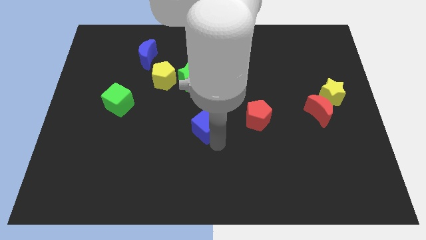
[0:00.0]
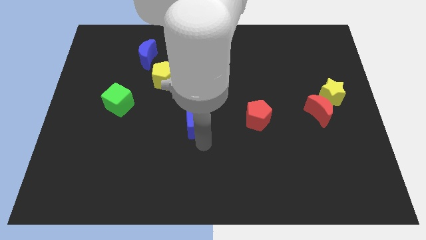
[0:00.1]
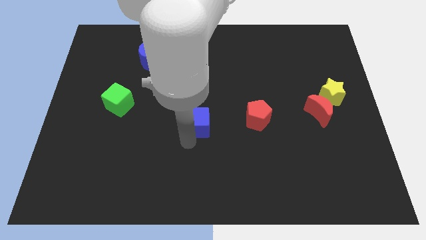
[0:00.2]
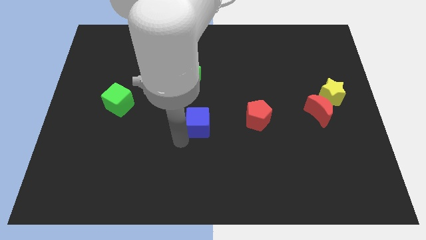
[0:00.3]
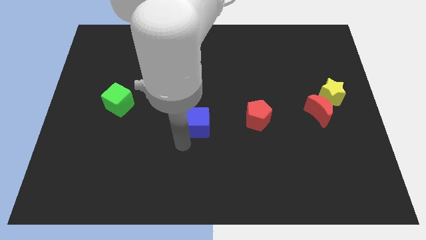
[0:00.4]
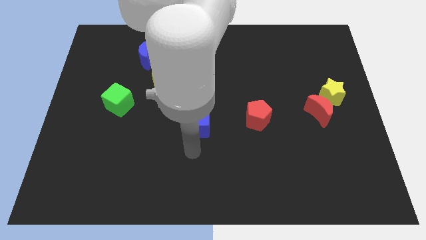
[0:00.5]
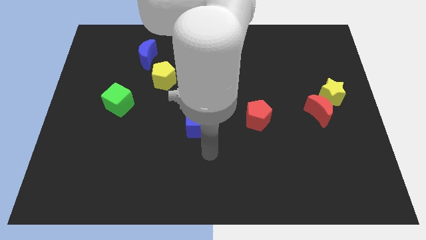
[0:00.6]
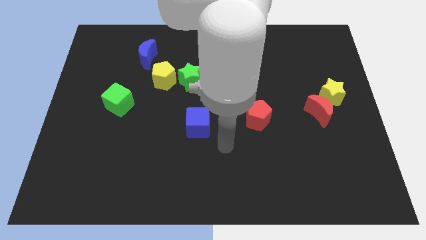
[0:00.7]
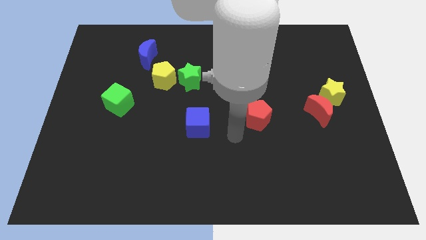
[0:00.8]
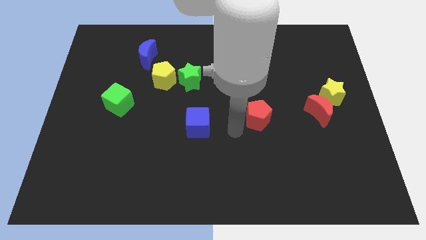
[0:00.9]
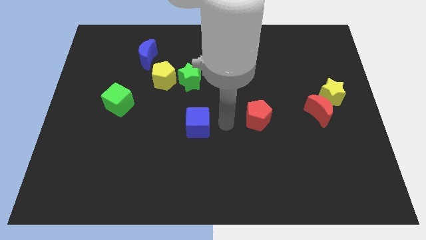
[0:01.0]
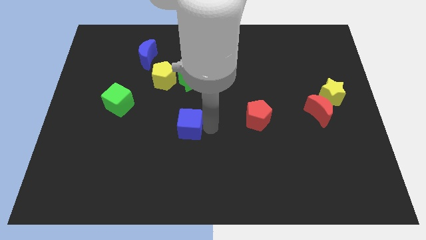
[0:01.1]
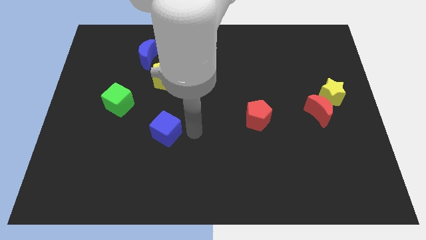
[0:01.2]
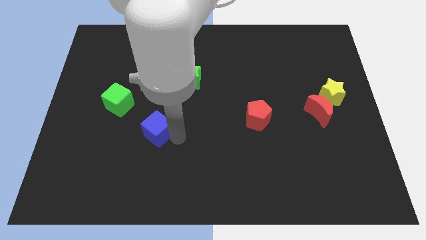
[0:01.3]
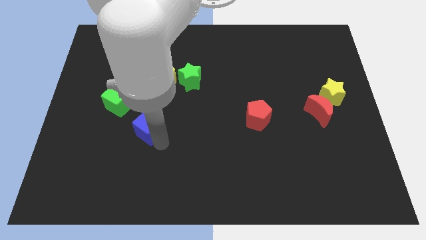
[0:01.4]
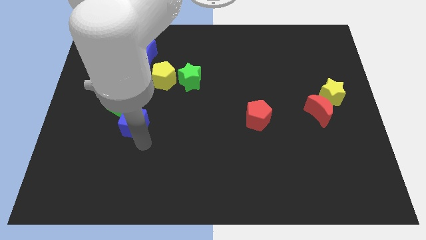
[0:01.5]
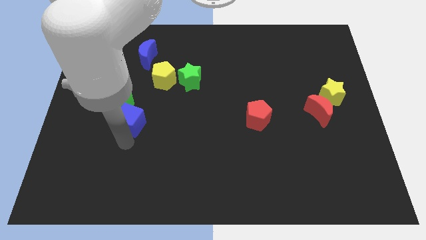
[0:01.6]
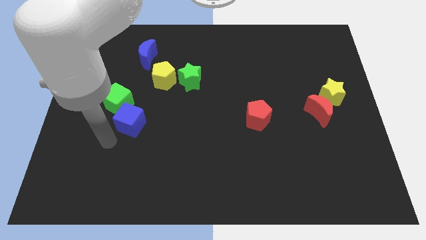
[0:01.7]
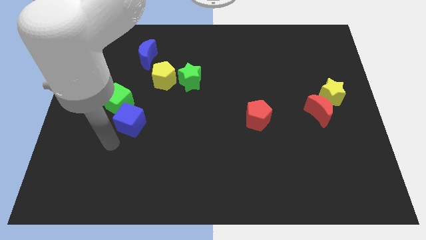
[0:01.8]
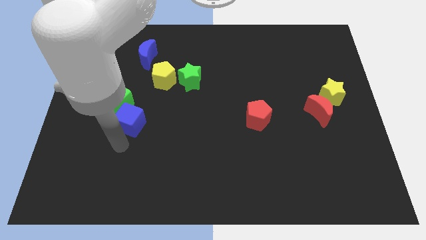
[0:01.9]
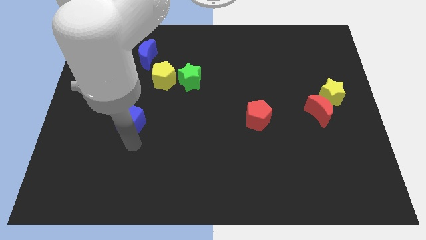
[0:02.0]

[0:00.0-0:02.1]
push blue cube below green cube

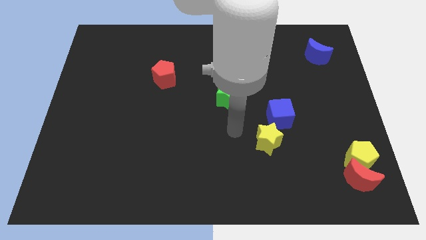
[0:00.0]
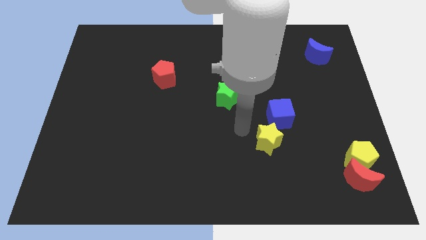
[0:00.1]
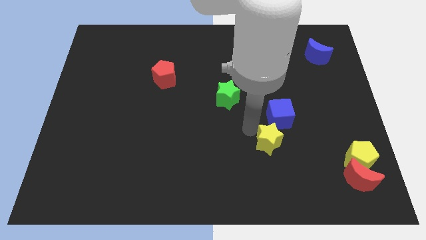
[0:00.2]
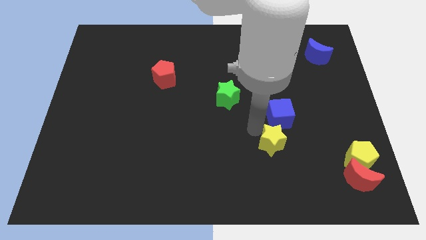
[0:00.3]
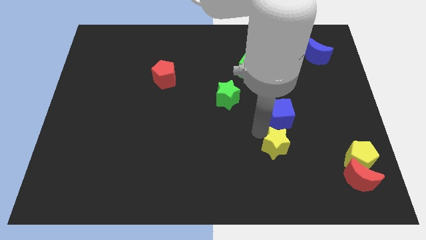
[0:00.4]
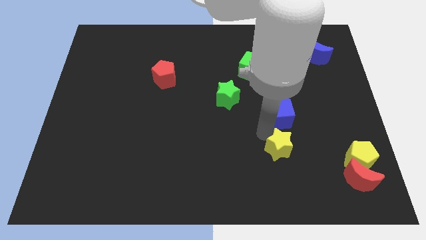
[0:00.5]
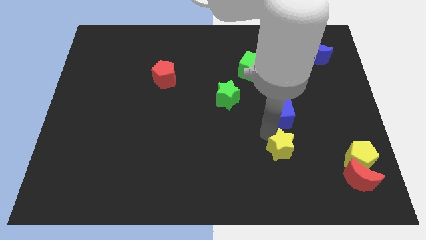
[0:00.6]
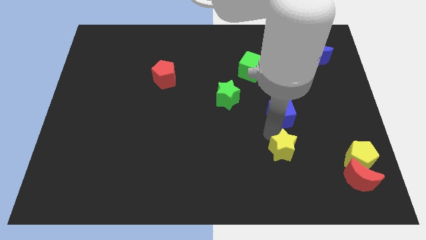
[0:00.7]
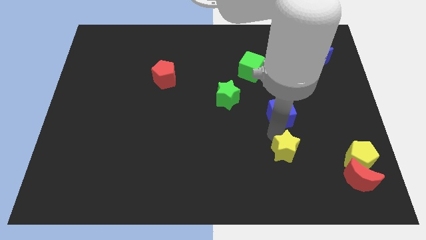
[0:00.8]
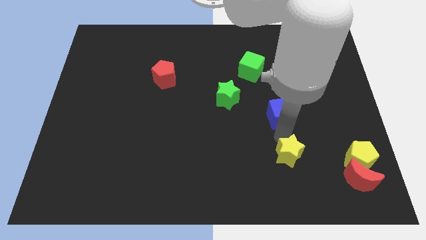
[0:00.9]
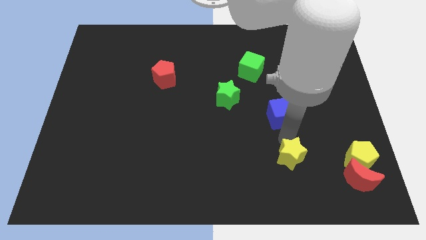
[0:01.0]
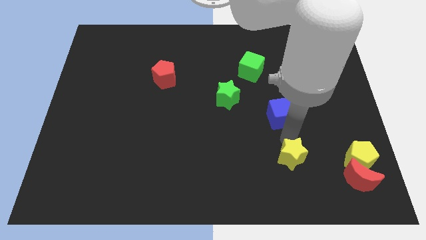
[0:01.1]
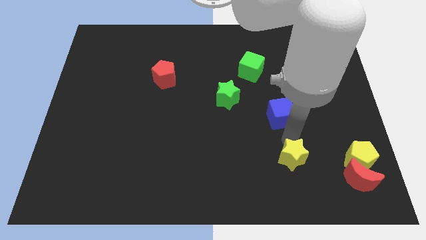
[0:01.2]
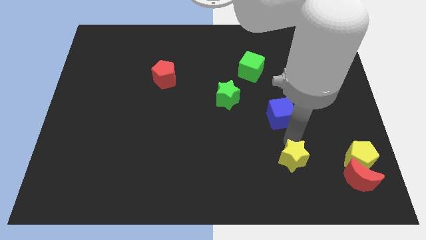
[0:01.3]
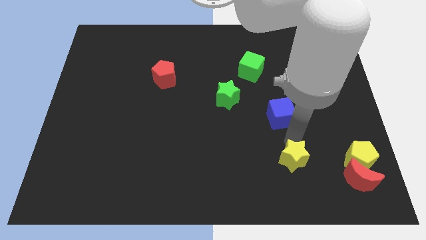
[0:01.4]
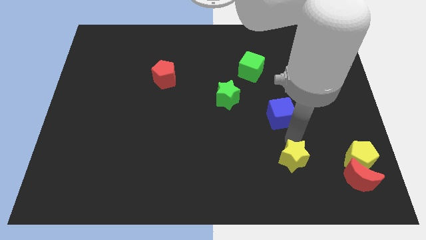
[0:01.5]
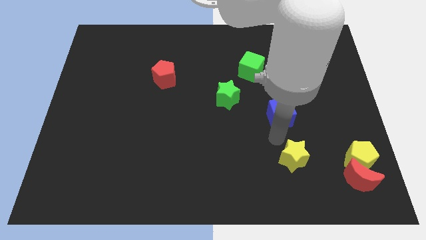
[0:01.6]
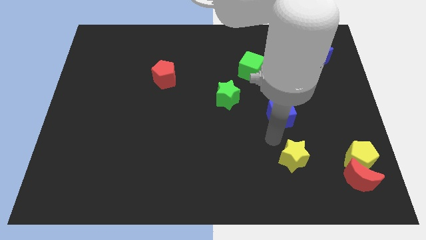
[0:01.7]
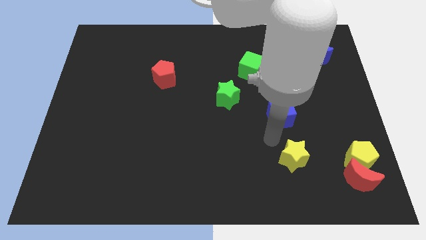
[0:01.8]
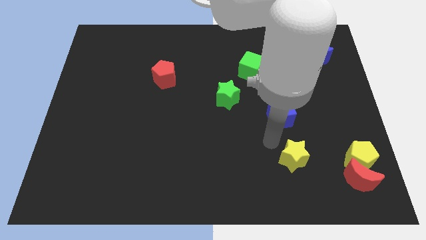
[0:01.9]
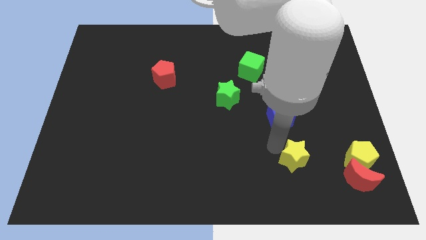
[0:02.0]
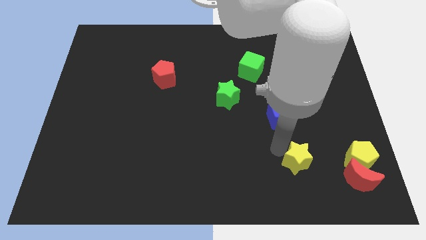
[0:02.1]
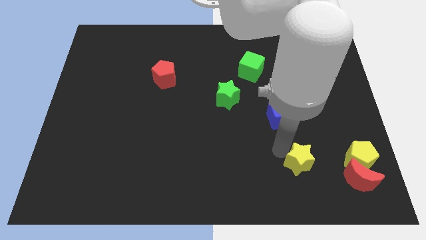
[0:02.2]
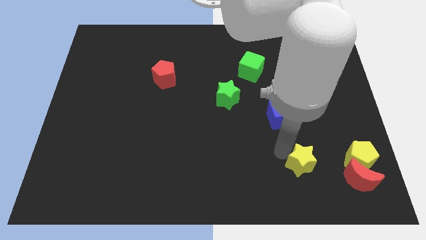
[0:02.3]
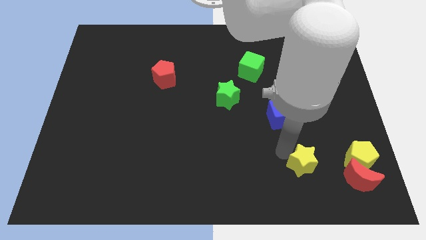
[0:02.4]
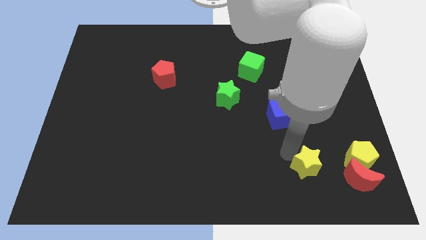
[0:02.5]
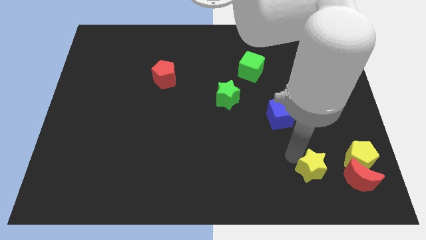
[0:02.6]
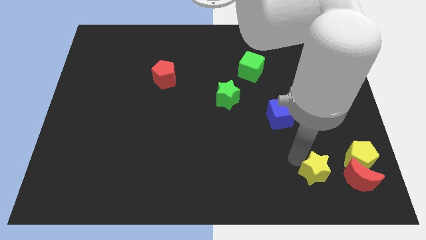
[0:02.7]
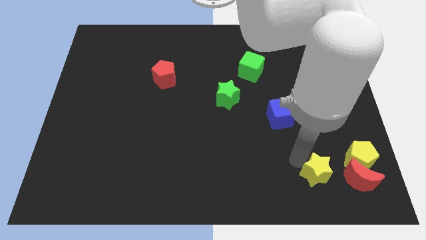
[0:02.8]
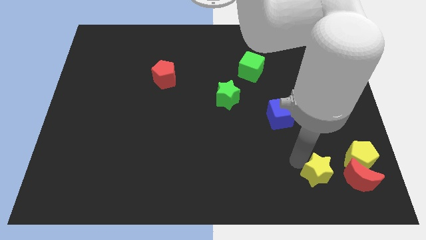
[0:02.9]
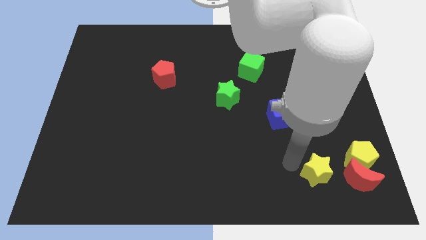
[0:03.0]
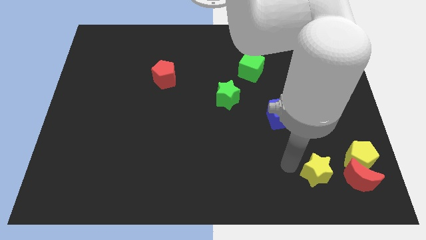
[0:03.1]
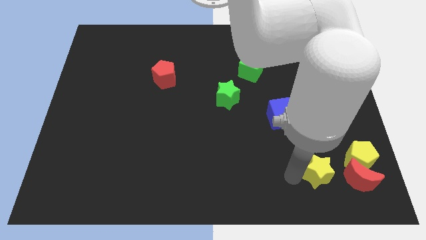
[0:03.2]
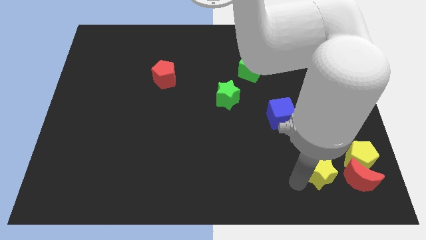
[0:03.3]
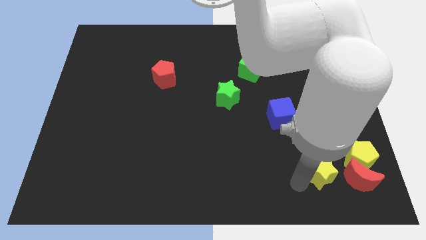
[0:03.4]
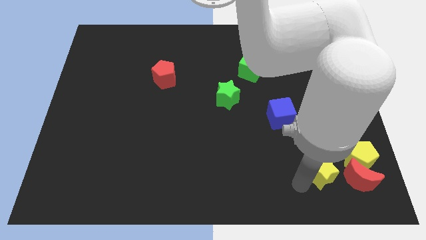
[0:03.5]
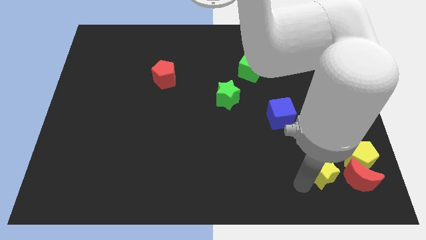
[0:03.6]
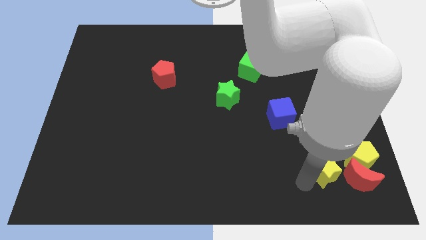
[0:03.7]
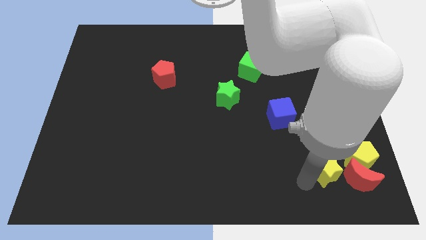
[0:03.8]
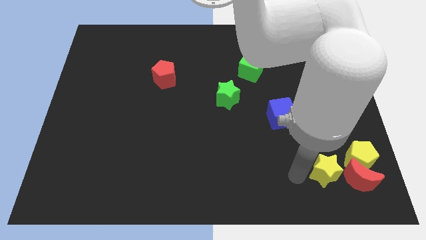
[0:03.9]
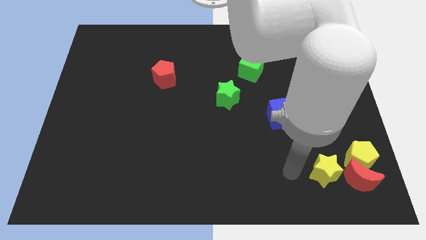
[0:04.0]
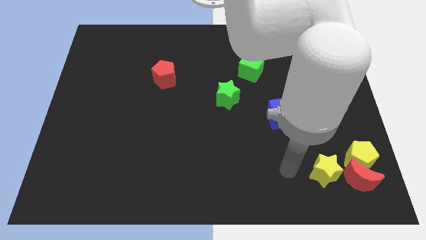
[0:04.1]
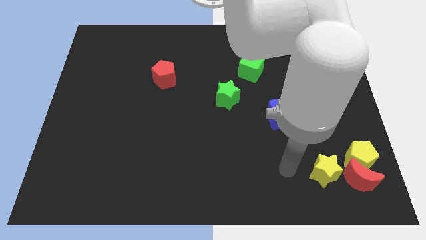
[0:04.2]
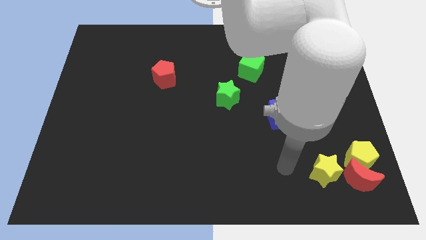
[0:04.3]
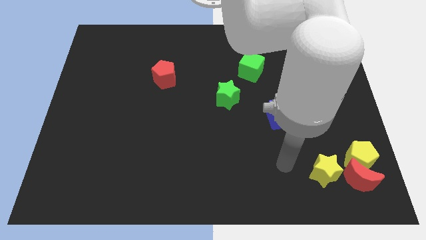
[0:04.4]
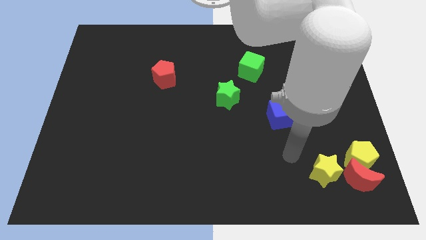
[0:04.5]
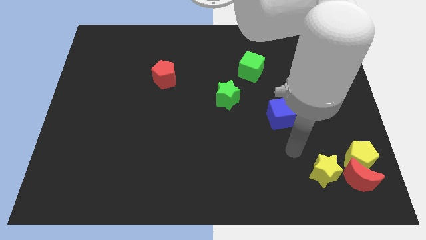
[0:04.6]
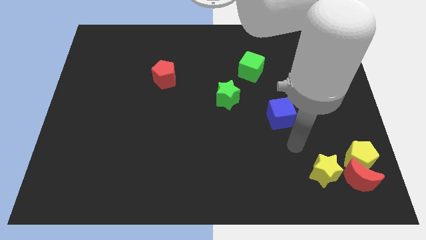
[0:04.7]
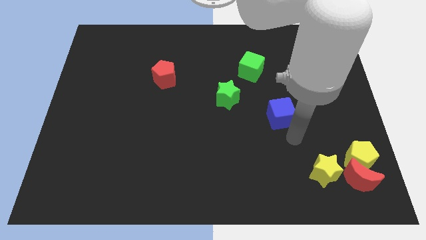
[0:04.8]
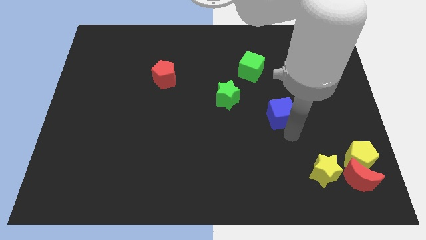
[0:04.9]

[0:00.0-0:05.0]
place the yellow star to the left of red moon

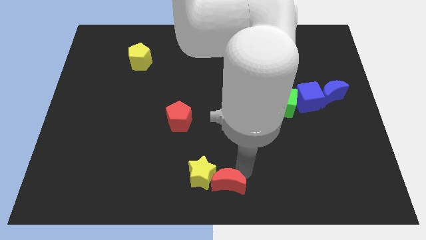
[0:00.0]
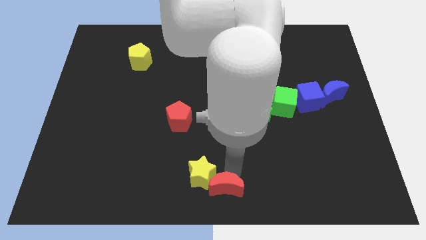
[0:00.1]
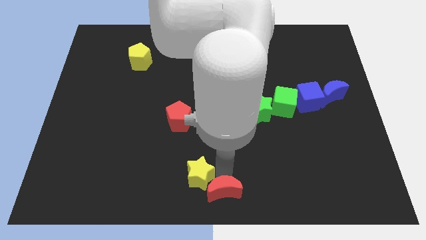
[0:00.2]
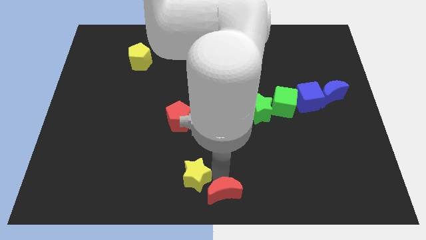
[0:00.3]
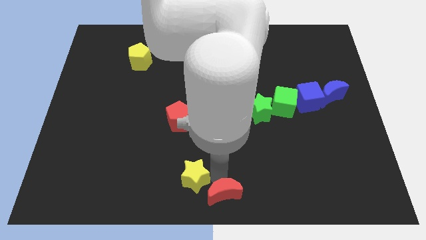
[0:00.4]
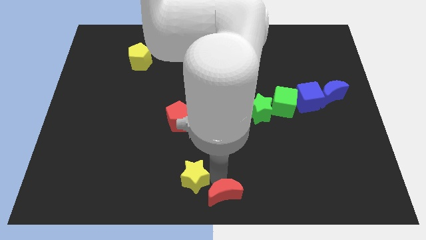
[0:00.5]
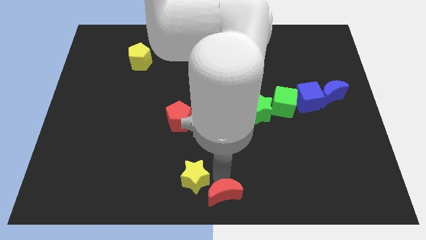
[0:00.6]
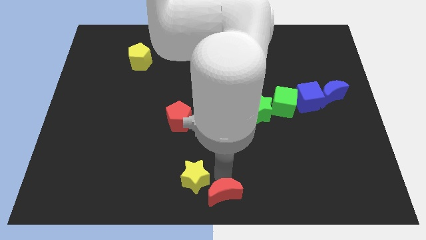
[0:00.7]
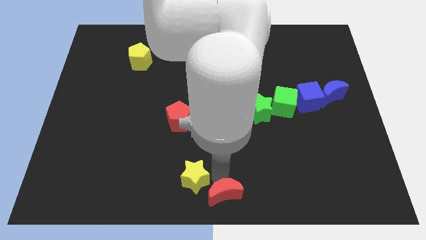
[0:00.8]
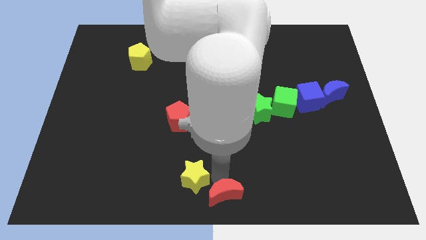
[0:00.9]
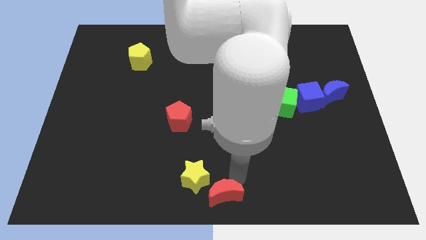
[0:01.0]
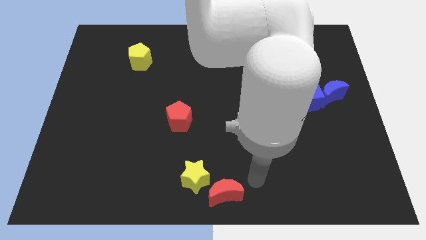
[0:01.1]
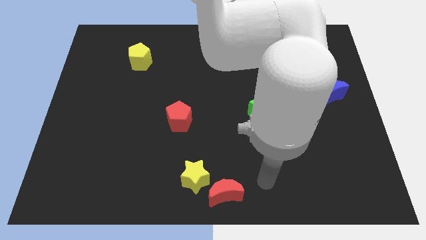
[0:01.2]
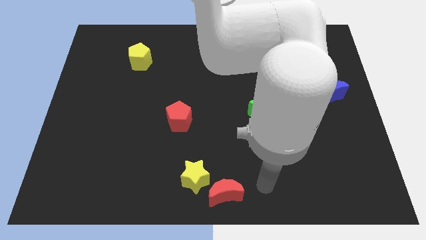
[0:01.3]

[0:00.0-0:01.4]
separate the yellow star and red moon

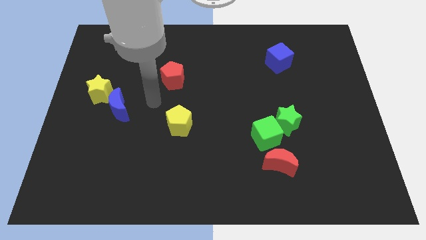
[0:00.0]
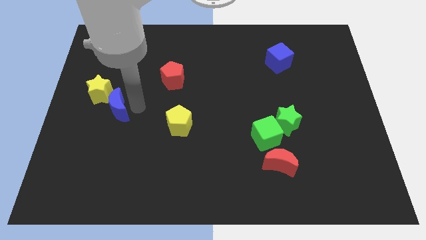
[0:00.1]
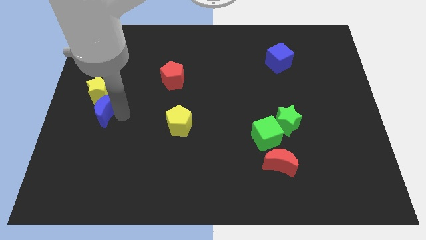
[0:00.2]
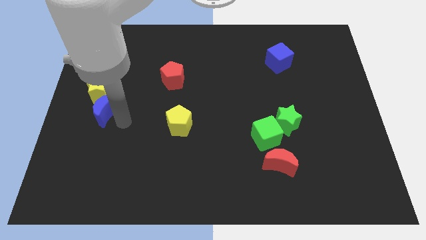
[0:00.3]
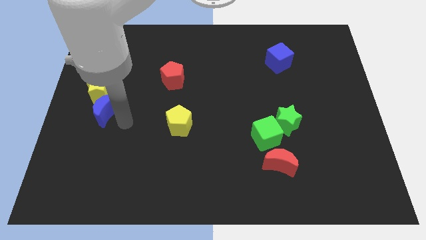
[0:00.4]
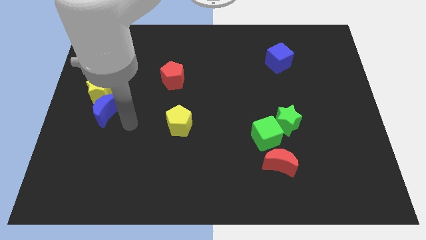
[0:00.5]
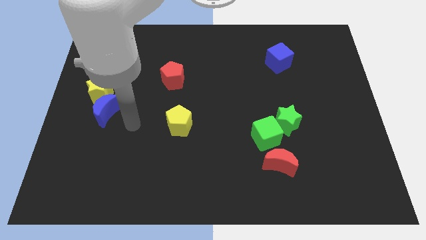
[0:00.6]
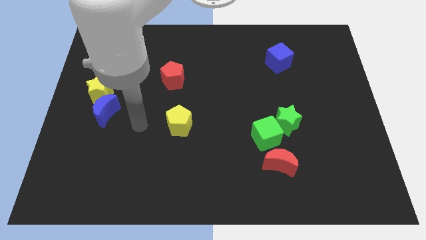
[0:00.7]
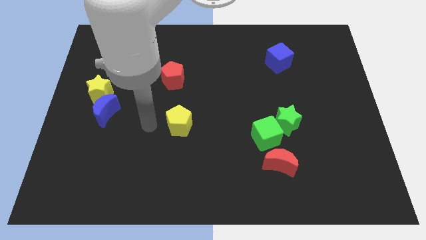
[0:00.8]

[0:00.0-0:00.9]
slightly push the blue crescent below the yellow star
